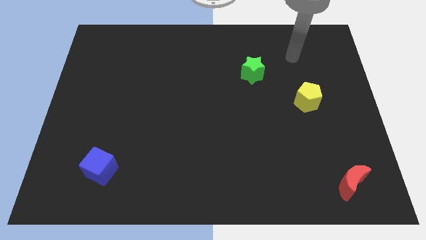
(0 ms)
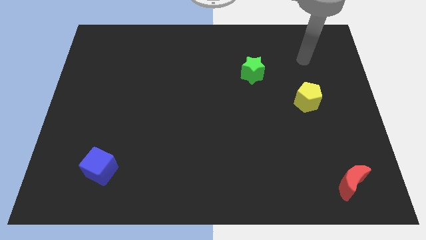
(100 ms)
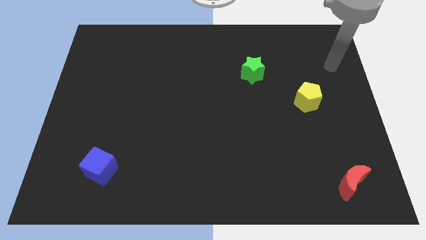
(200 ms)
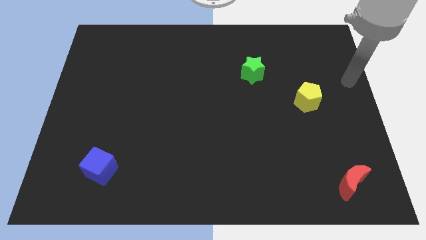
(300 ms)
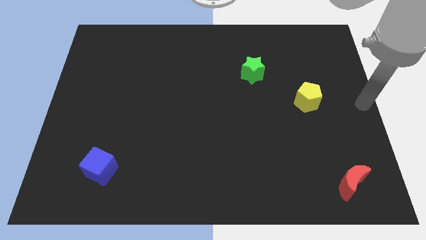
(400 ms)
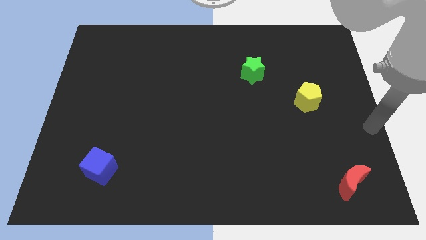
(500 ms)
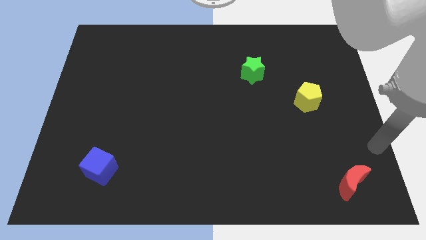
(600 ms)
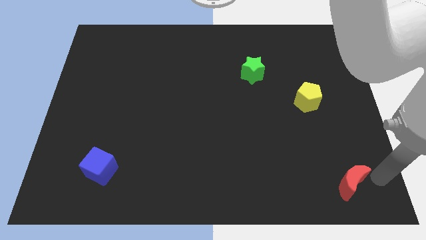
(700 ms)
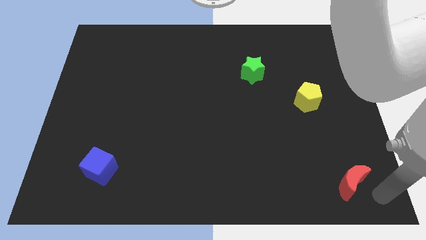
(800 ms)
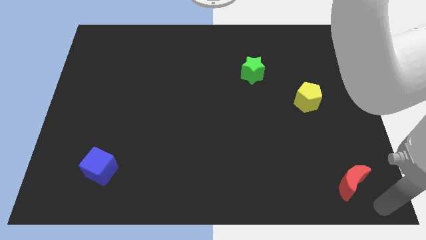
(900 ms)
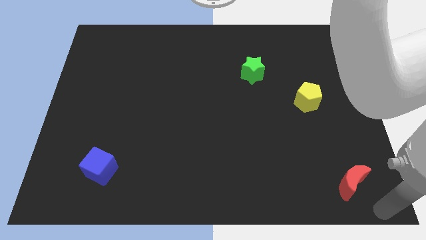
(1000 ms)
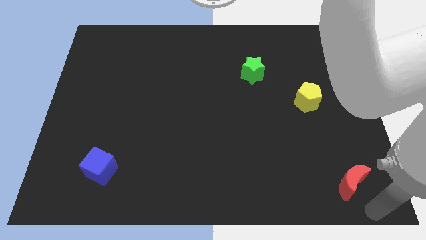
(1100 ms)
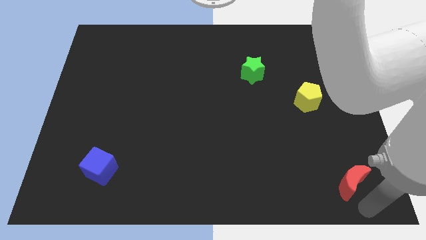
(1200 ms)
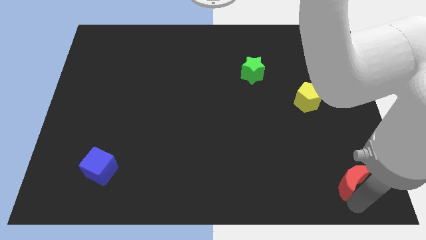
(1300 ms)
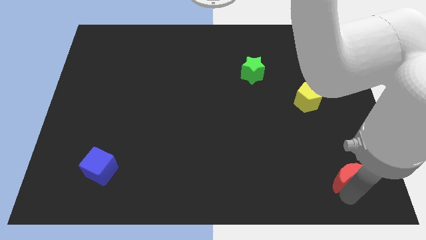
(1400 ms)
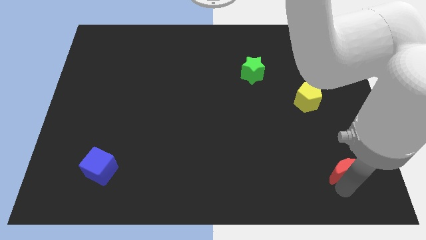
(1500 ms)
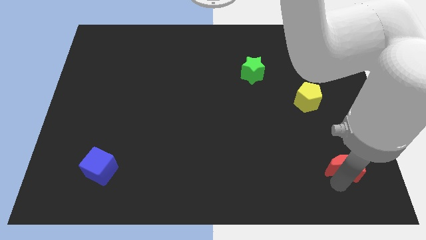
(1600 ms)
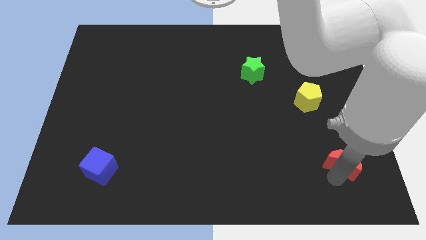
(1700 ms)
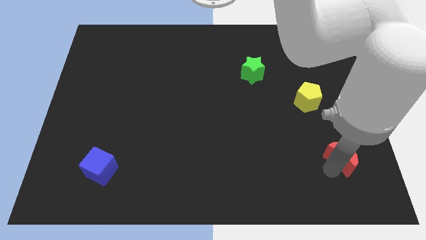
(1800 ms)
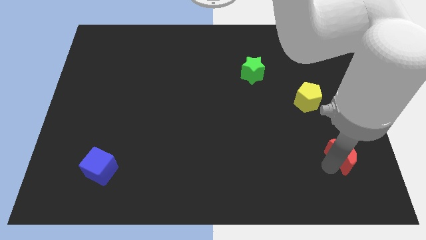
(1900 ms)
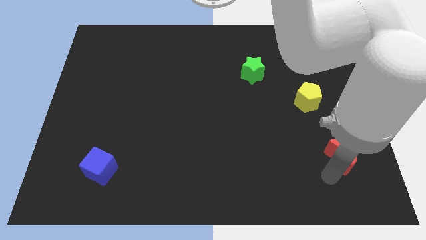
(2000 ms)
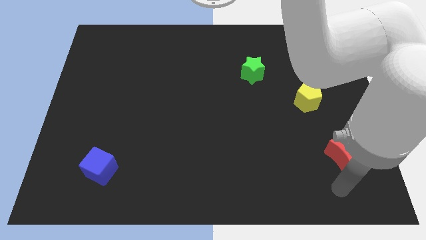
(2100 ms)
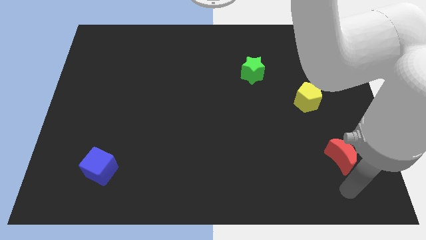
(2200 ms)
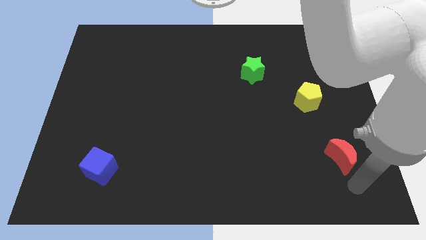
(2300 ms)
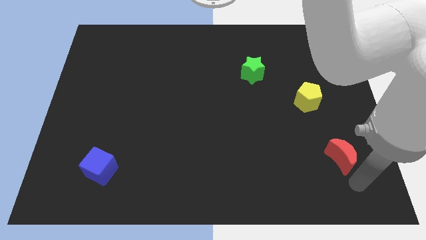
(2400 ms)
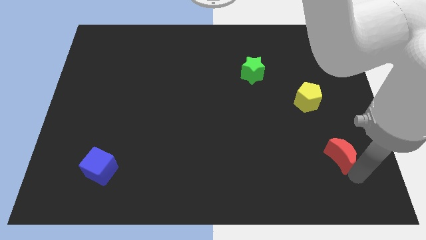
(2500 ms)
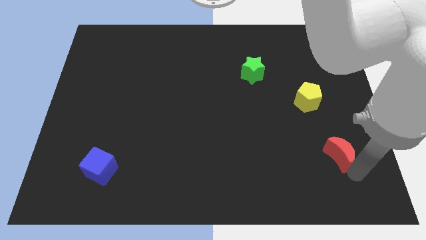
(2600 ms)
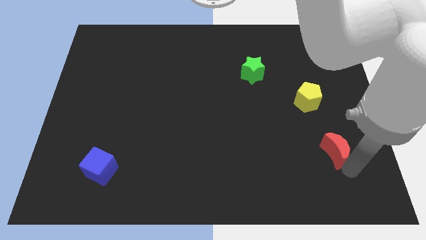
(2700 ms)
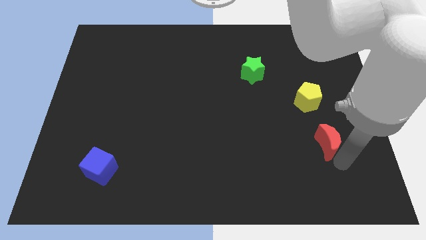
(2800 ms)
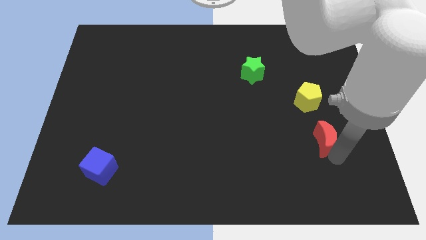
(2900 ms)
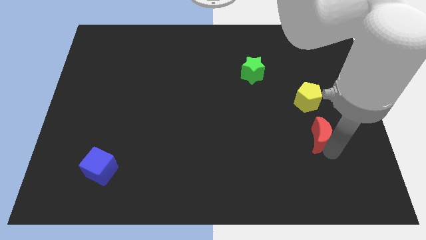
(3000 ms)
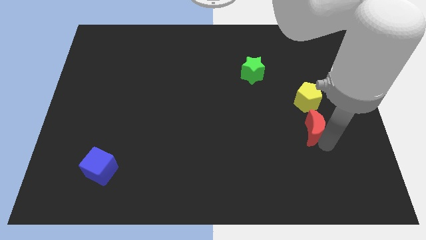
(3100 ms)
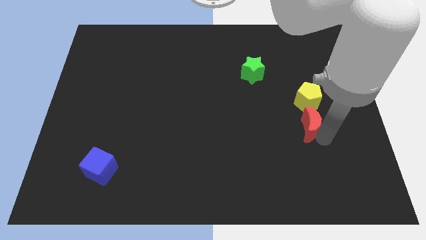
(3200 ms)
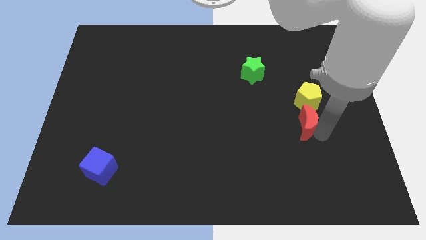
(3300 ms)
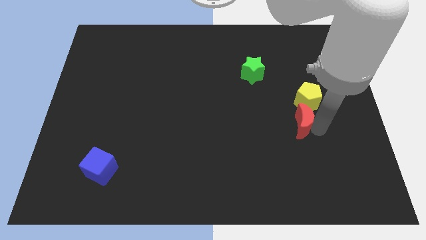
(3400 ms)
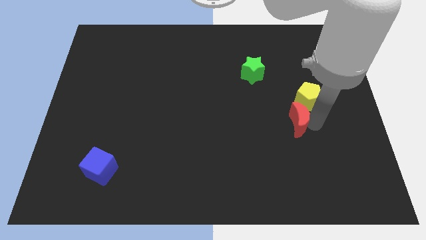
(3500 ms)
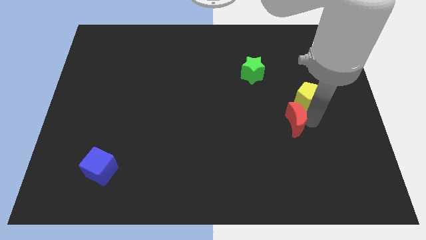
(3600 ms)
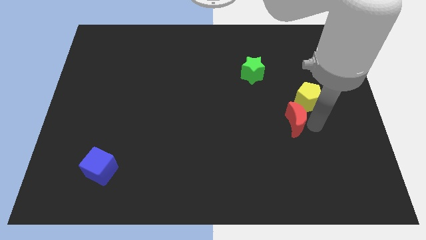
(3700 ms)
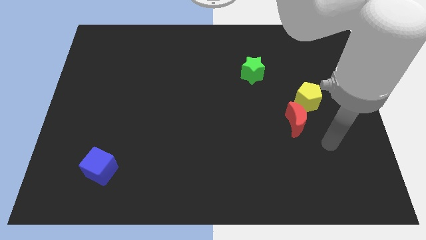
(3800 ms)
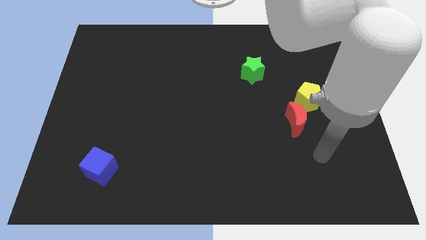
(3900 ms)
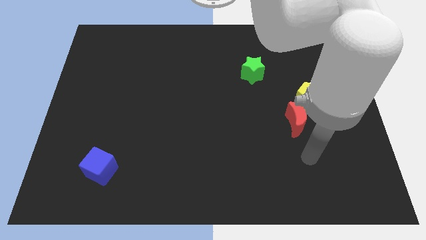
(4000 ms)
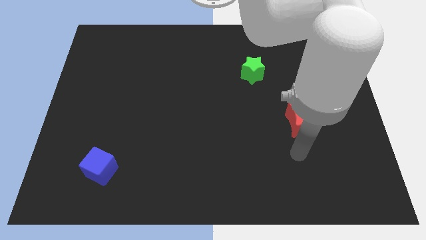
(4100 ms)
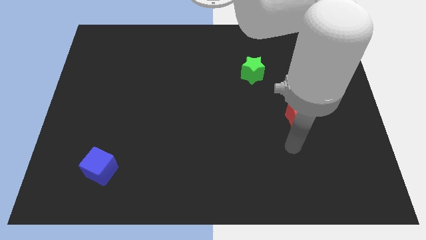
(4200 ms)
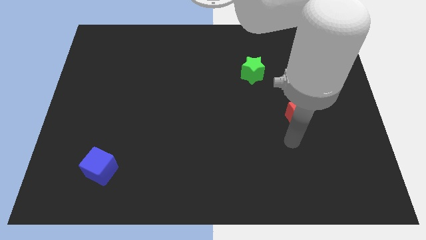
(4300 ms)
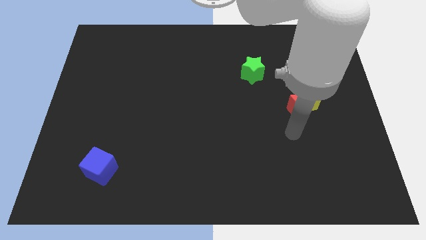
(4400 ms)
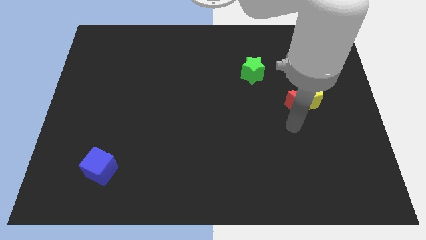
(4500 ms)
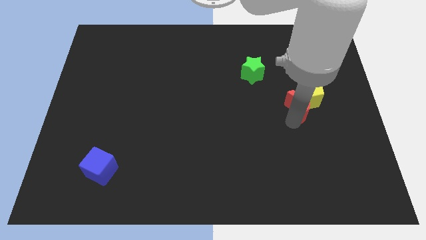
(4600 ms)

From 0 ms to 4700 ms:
move the red block towards the yellow block

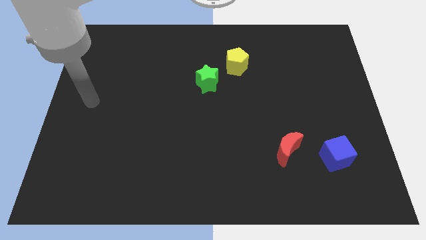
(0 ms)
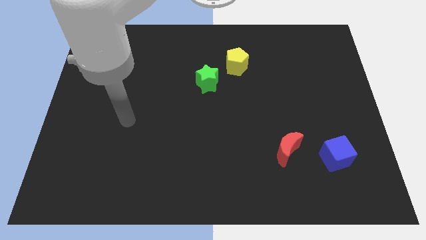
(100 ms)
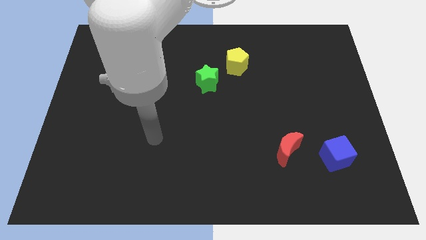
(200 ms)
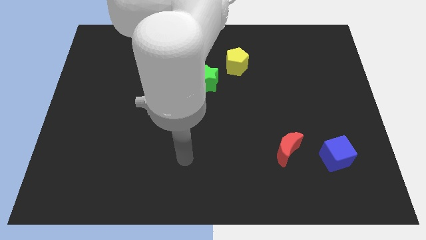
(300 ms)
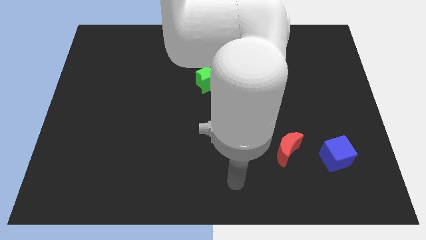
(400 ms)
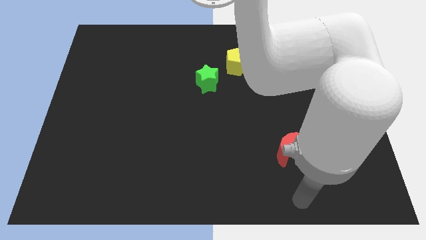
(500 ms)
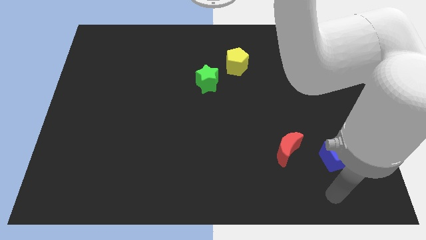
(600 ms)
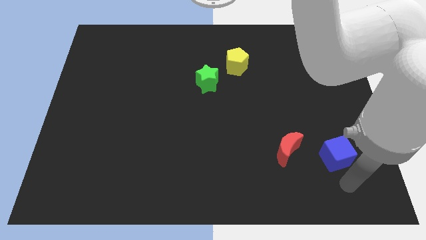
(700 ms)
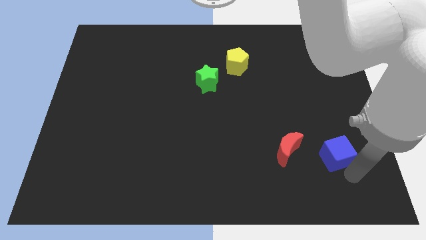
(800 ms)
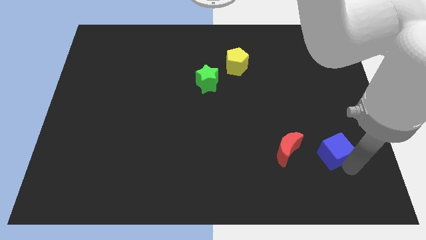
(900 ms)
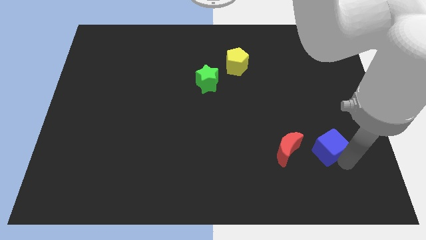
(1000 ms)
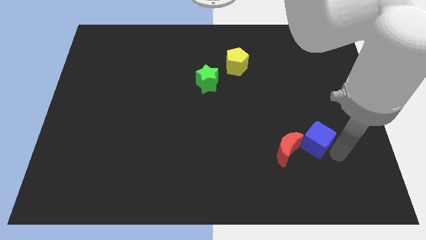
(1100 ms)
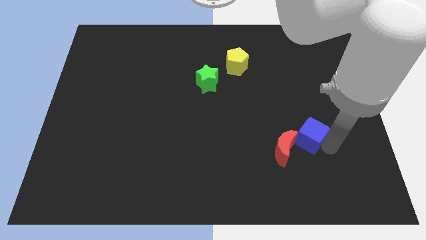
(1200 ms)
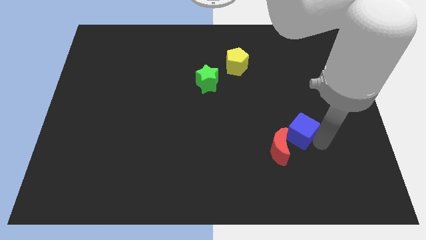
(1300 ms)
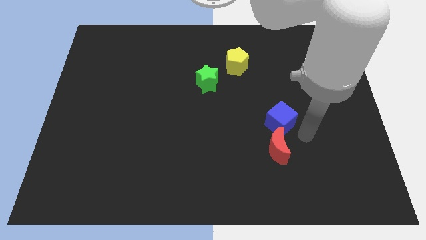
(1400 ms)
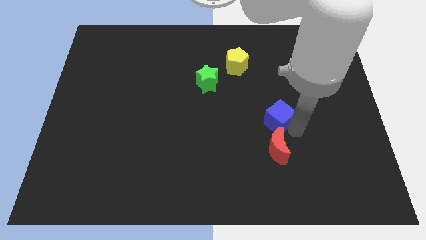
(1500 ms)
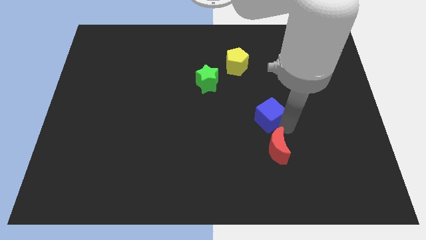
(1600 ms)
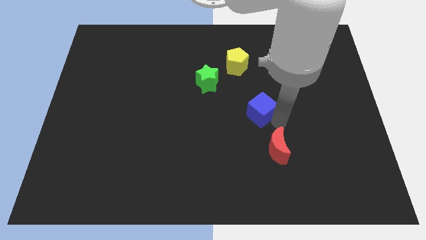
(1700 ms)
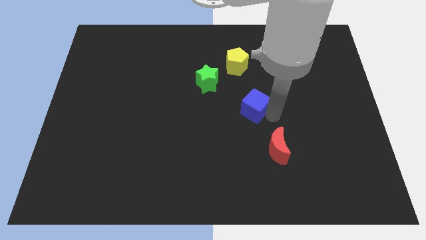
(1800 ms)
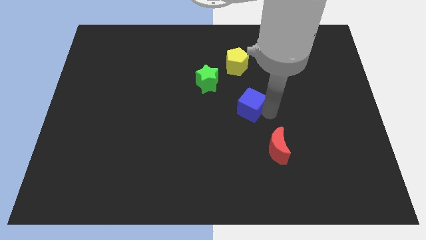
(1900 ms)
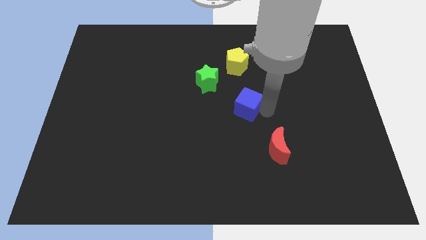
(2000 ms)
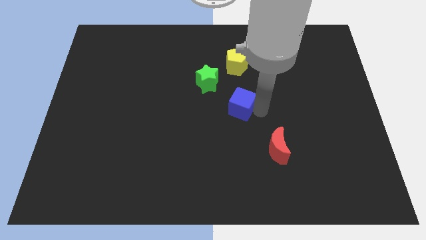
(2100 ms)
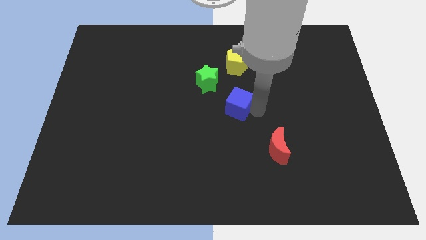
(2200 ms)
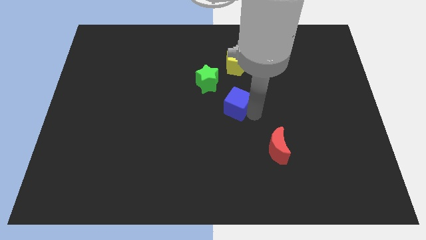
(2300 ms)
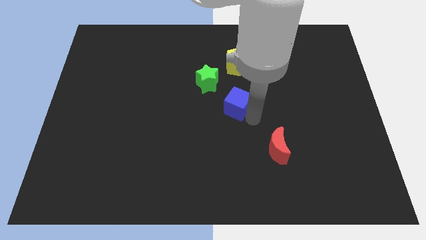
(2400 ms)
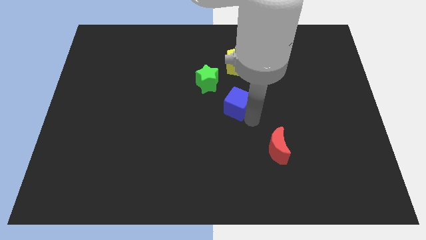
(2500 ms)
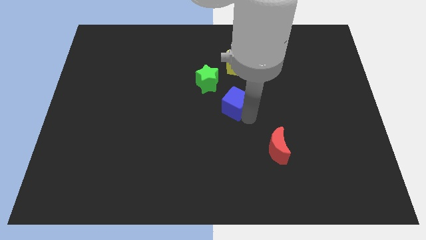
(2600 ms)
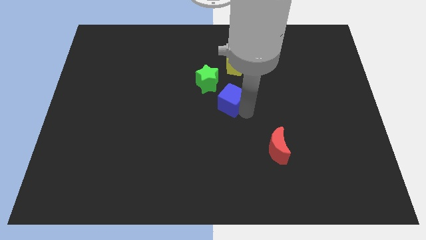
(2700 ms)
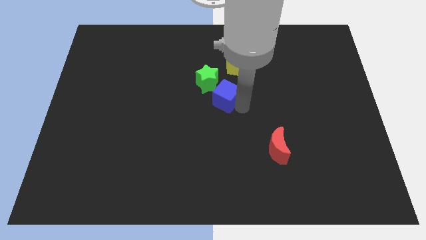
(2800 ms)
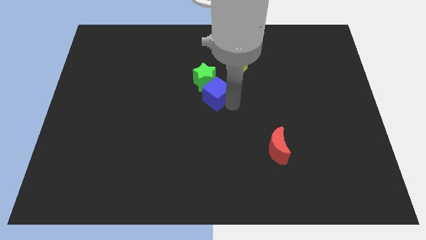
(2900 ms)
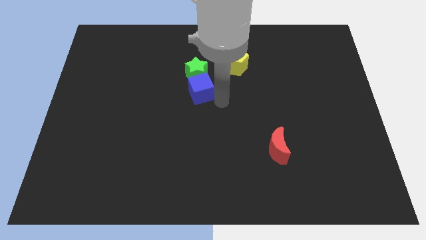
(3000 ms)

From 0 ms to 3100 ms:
slide the cube to the green star

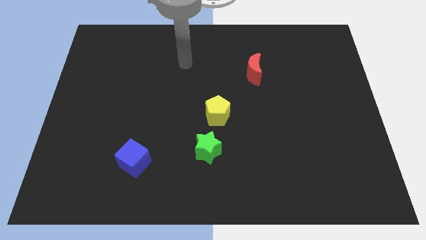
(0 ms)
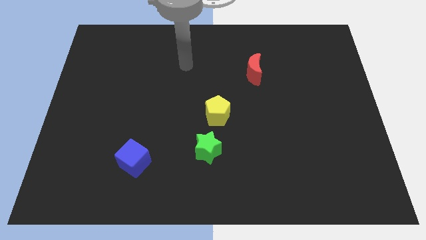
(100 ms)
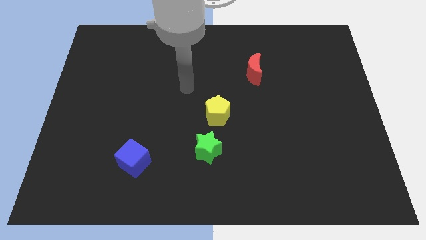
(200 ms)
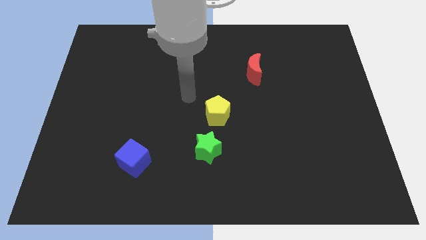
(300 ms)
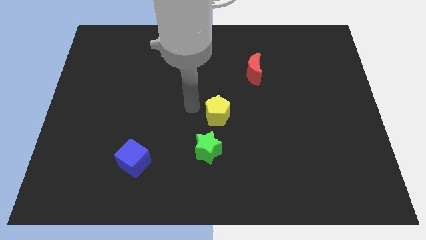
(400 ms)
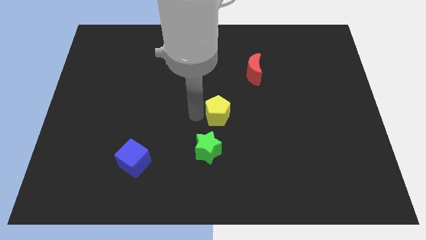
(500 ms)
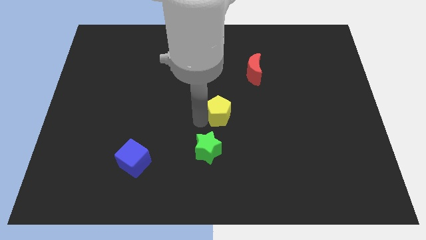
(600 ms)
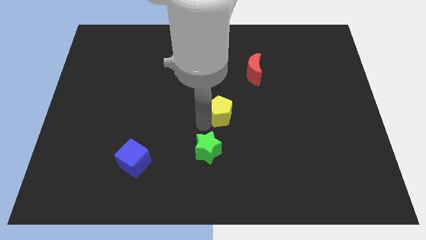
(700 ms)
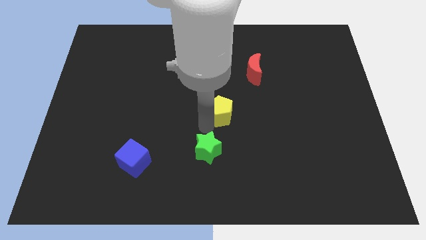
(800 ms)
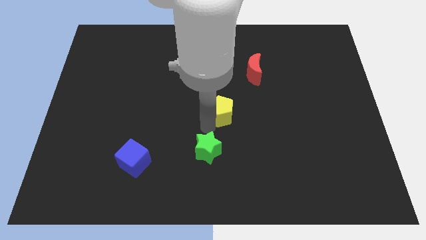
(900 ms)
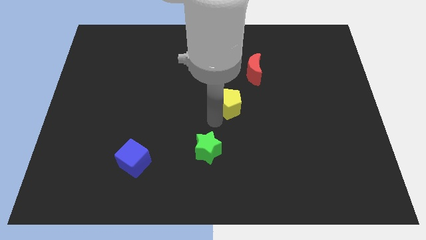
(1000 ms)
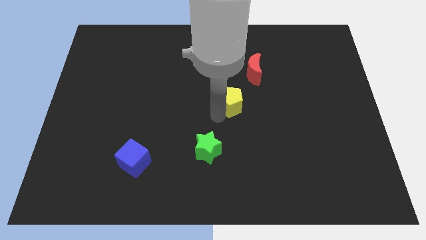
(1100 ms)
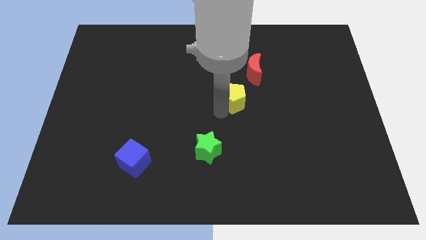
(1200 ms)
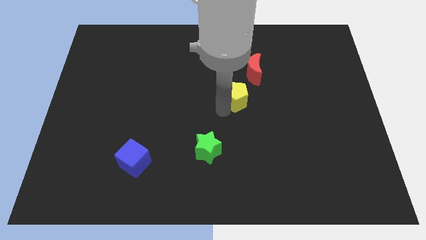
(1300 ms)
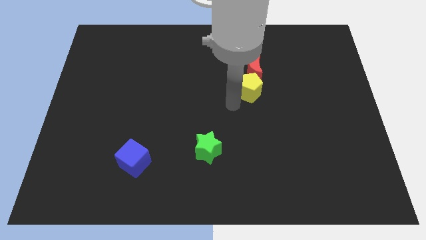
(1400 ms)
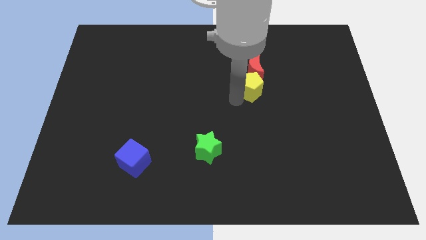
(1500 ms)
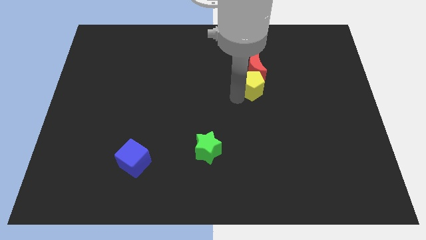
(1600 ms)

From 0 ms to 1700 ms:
put the pentagon towards the moon
